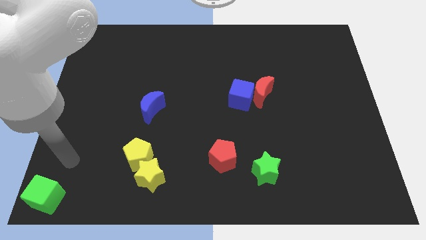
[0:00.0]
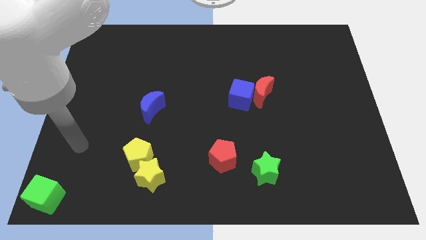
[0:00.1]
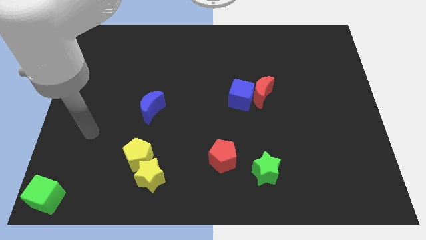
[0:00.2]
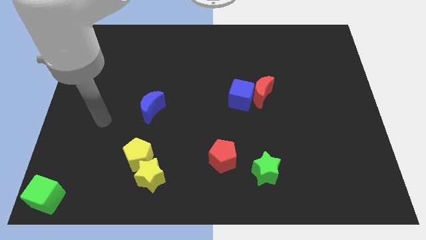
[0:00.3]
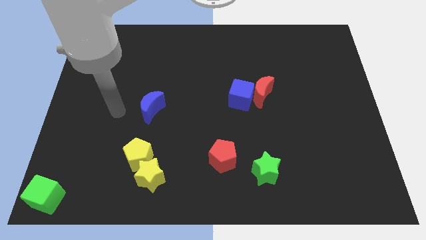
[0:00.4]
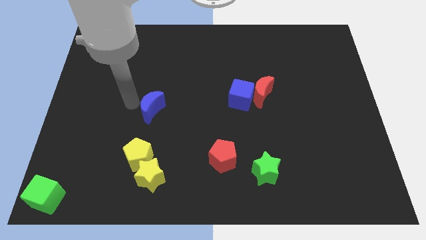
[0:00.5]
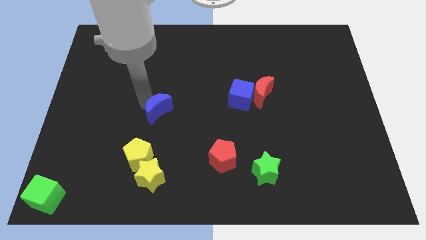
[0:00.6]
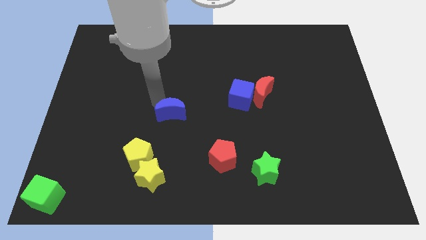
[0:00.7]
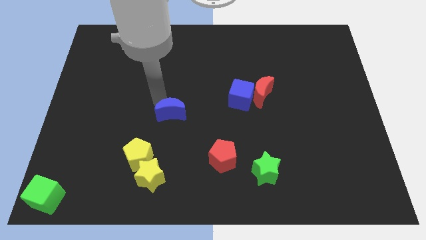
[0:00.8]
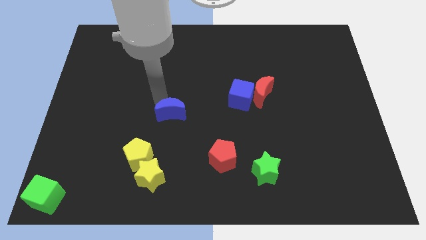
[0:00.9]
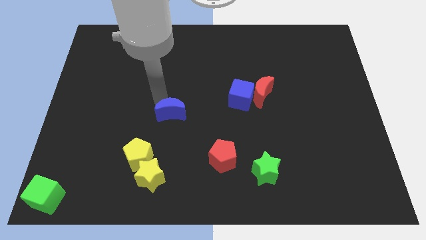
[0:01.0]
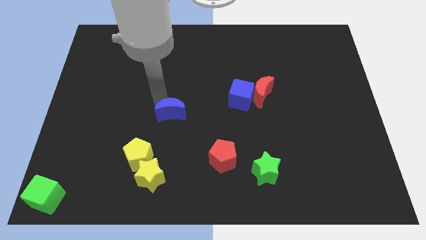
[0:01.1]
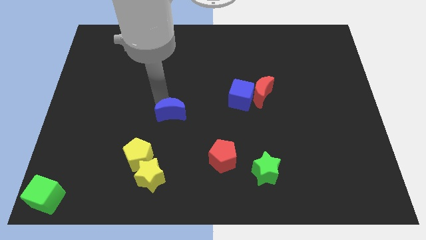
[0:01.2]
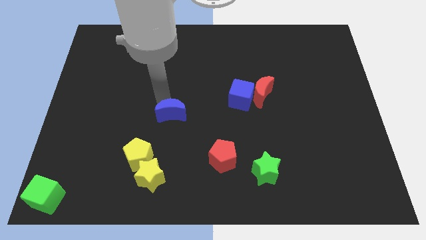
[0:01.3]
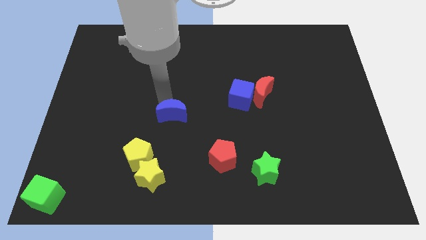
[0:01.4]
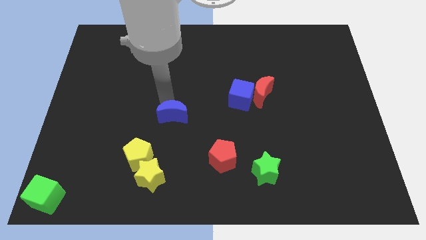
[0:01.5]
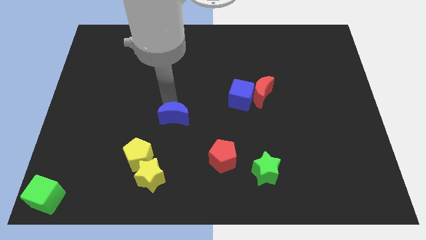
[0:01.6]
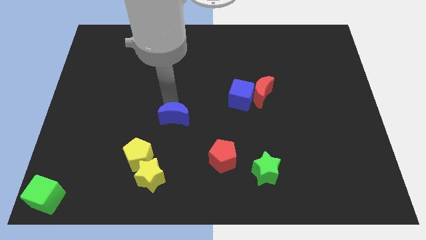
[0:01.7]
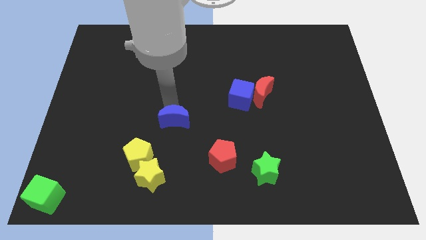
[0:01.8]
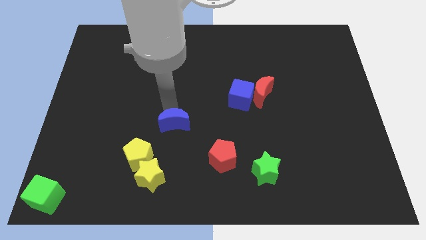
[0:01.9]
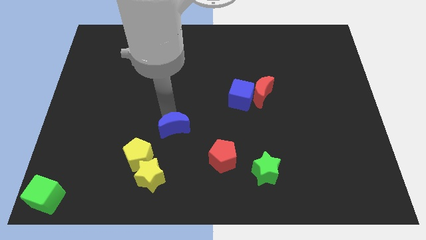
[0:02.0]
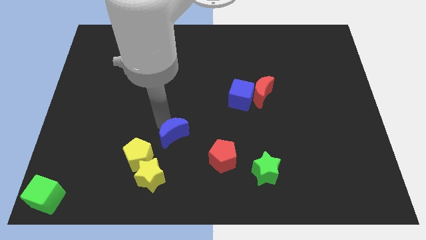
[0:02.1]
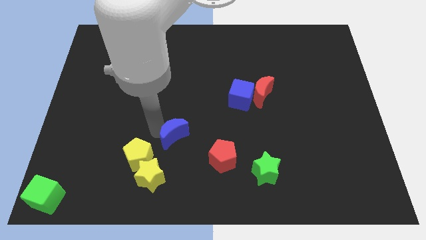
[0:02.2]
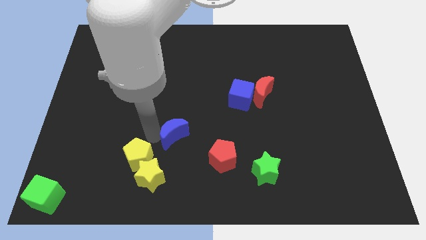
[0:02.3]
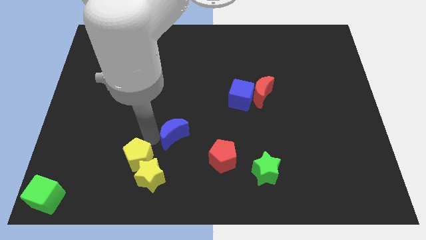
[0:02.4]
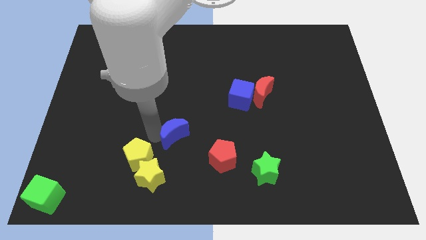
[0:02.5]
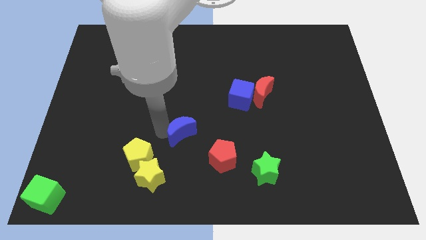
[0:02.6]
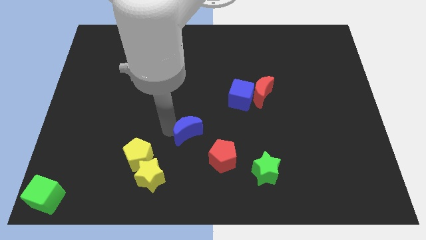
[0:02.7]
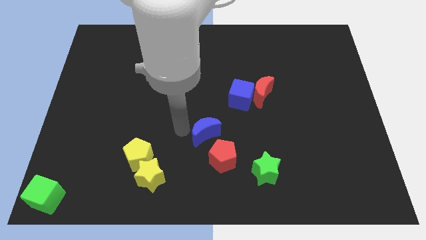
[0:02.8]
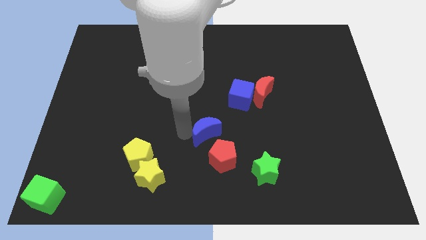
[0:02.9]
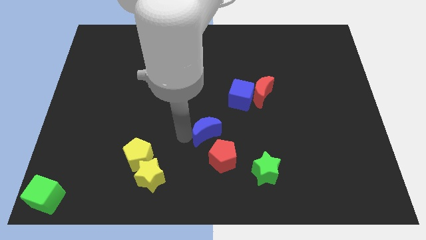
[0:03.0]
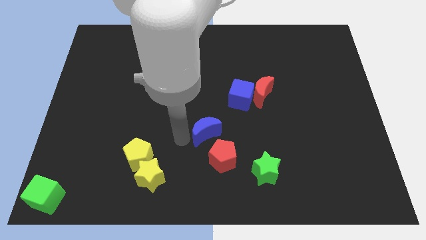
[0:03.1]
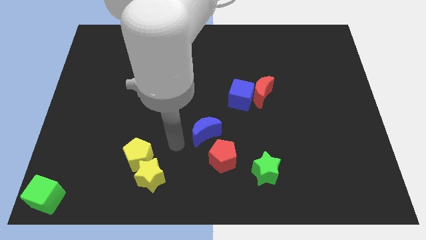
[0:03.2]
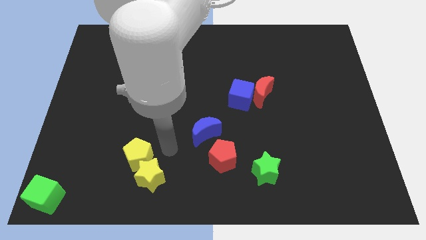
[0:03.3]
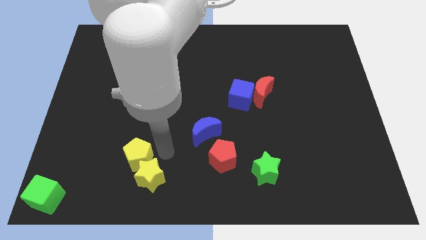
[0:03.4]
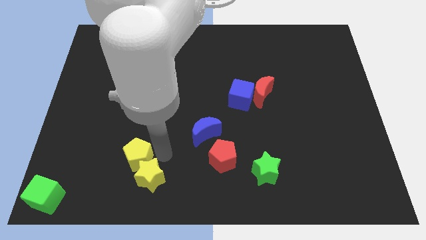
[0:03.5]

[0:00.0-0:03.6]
move the blue moon towards the red pentagon

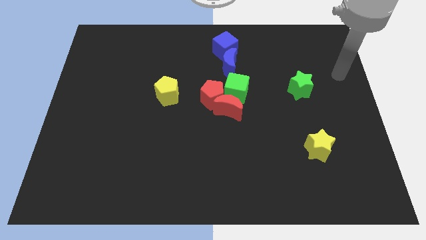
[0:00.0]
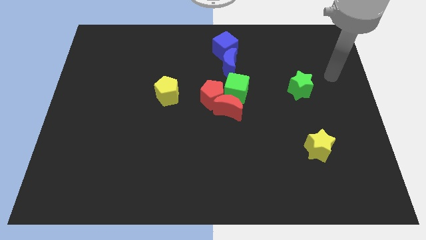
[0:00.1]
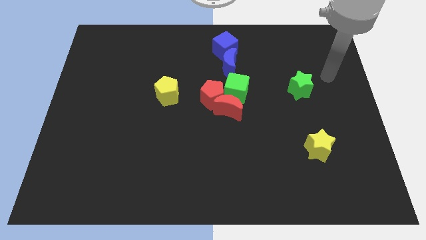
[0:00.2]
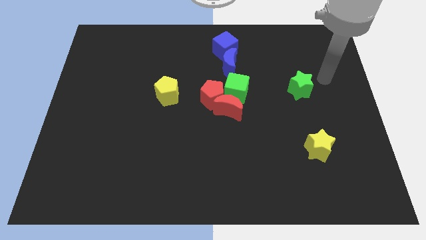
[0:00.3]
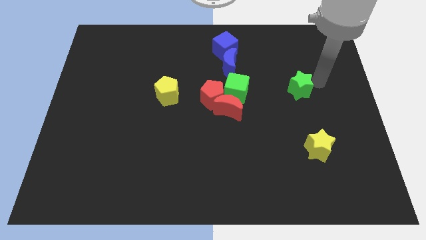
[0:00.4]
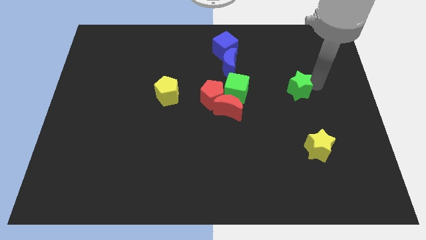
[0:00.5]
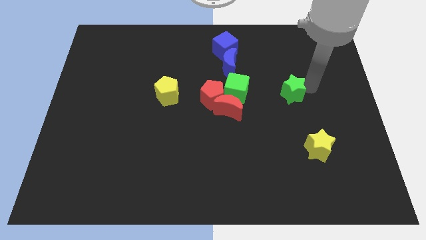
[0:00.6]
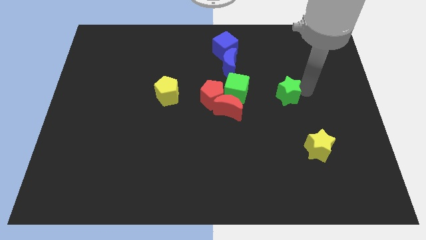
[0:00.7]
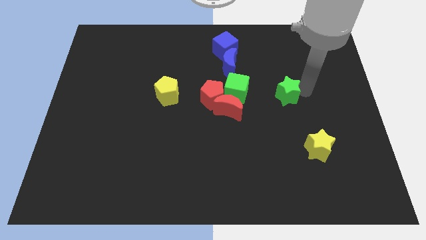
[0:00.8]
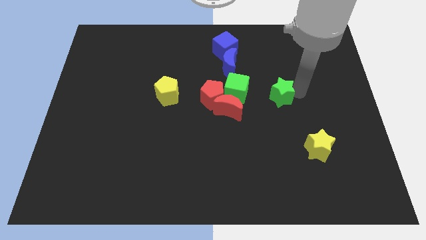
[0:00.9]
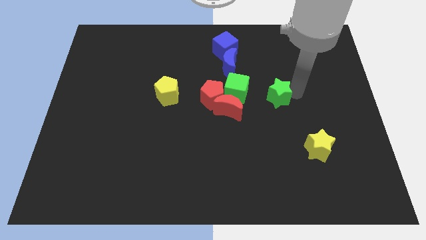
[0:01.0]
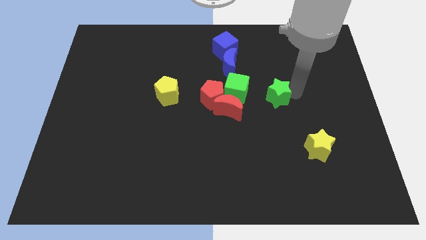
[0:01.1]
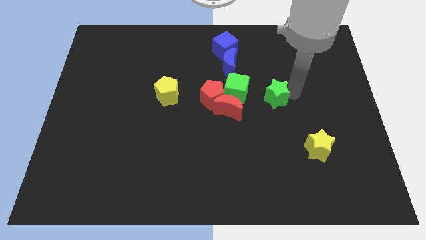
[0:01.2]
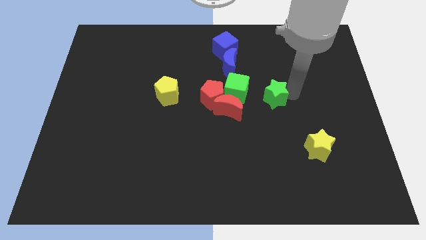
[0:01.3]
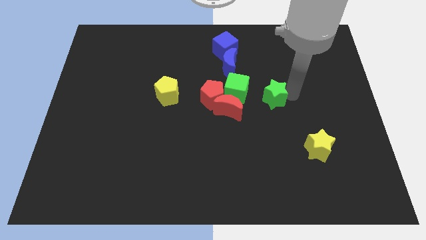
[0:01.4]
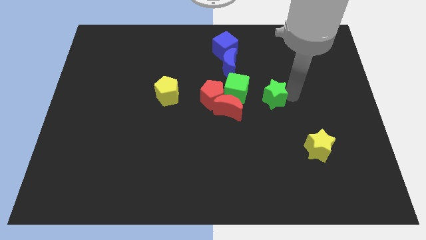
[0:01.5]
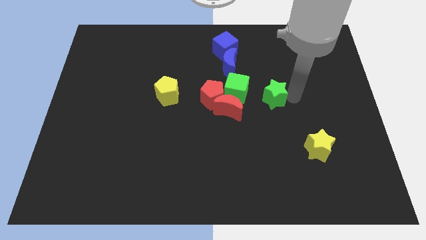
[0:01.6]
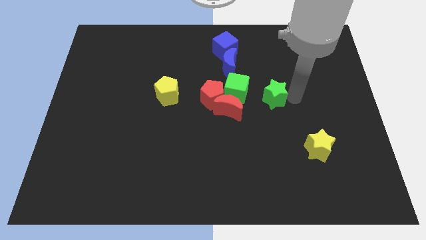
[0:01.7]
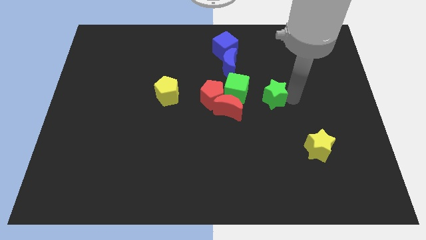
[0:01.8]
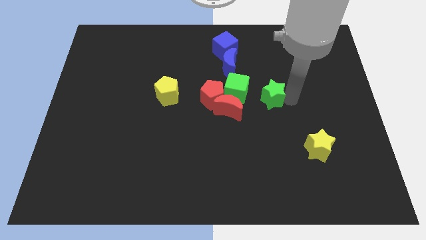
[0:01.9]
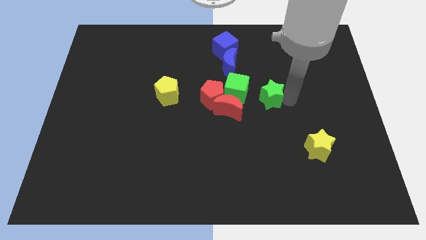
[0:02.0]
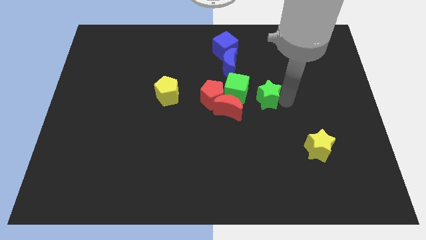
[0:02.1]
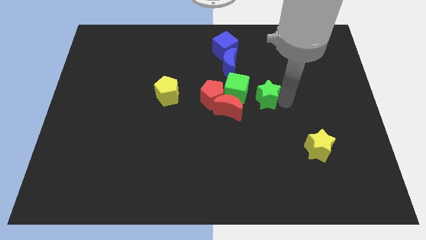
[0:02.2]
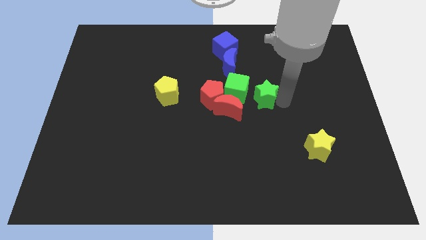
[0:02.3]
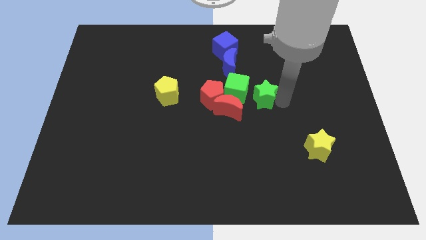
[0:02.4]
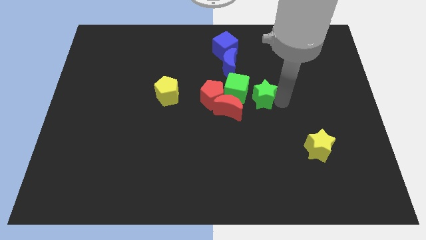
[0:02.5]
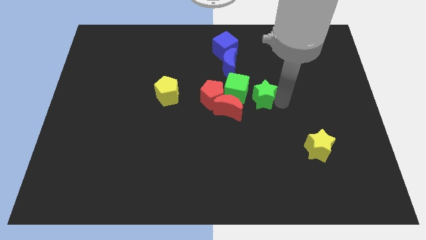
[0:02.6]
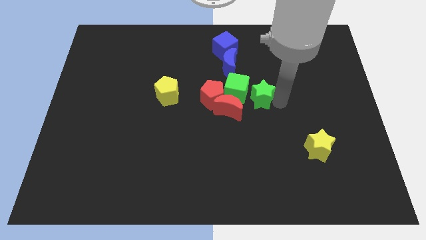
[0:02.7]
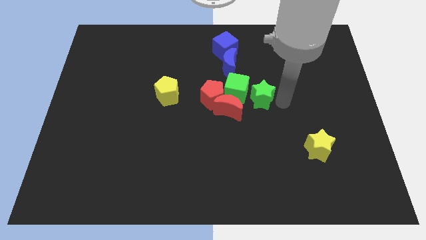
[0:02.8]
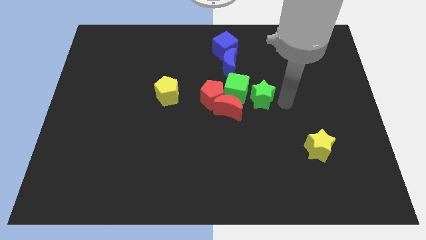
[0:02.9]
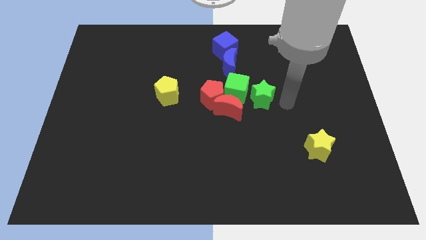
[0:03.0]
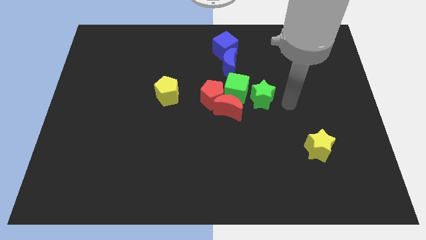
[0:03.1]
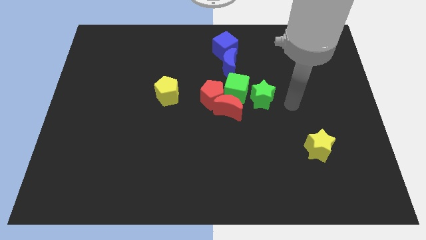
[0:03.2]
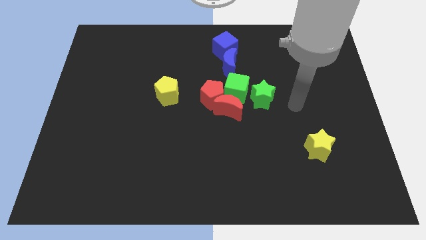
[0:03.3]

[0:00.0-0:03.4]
bring the green star at the right side of the green cube

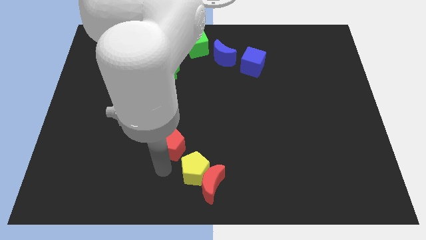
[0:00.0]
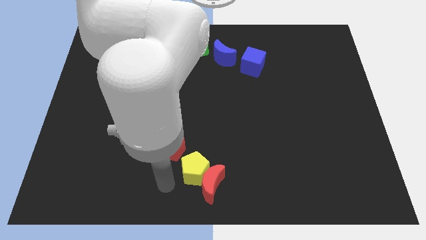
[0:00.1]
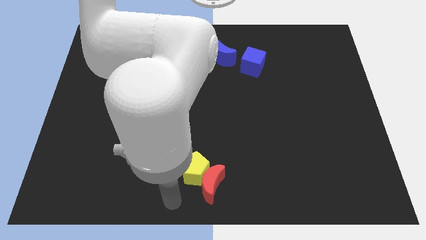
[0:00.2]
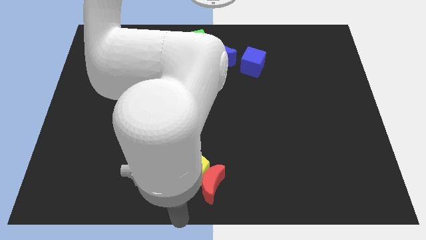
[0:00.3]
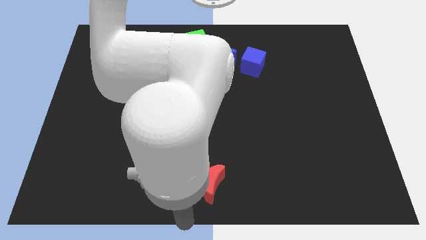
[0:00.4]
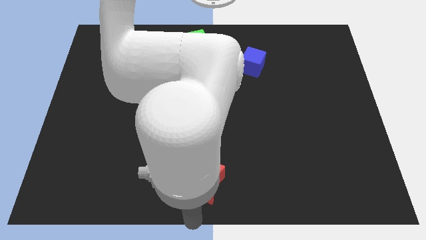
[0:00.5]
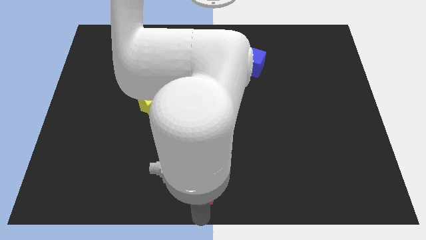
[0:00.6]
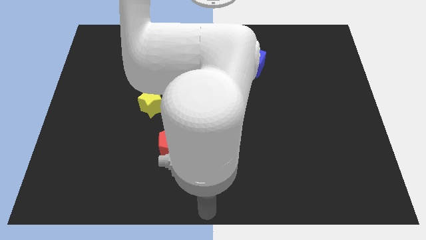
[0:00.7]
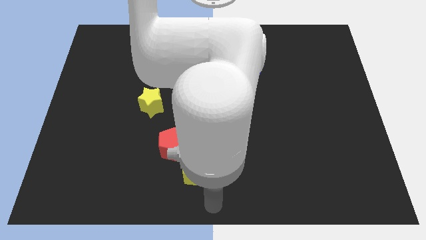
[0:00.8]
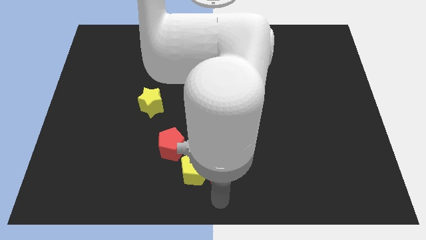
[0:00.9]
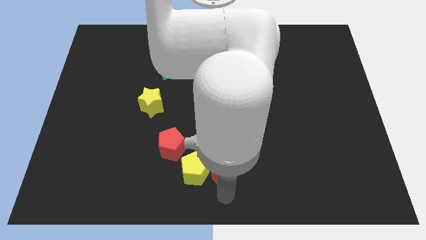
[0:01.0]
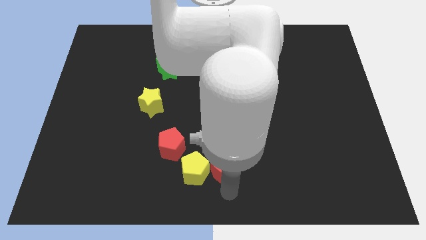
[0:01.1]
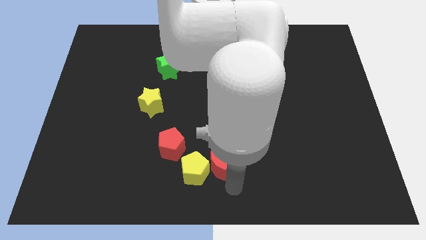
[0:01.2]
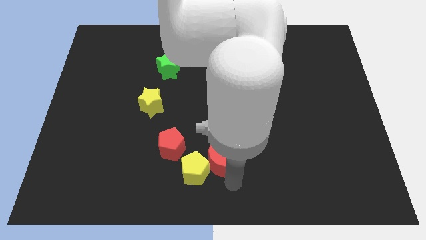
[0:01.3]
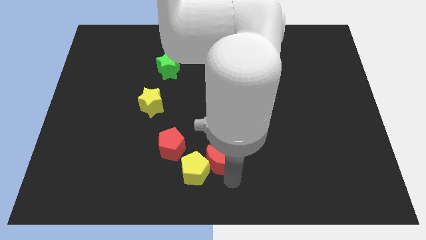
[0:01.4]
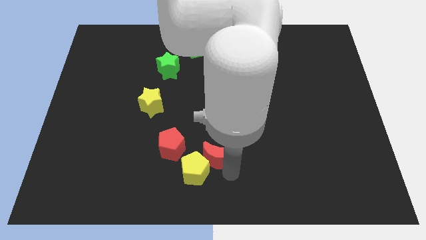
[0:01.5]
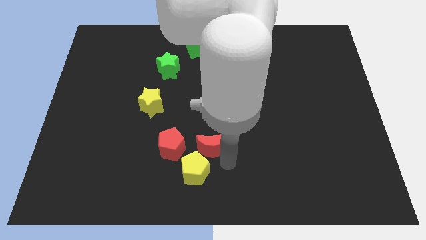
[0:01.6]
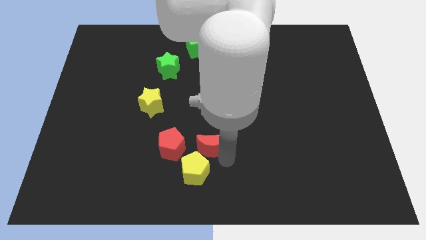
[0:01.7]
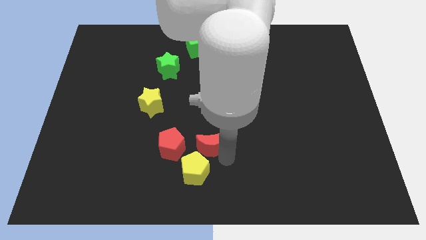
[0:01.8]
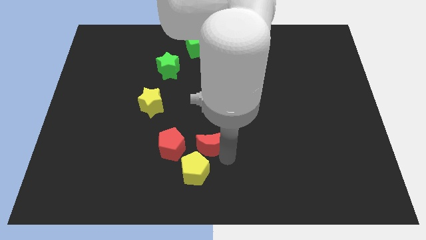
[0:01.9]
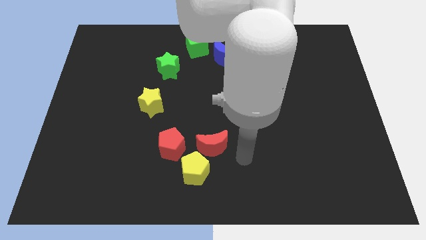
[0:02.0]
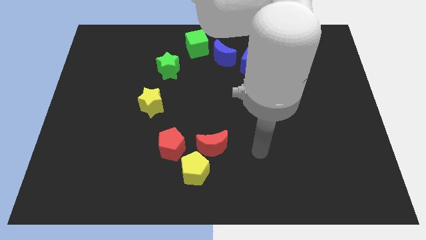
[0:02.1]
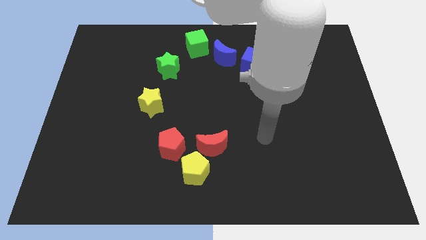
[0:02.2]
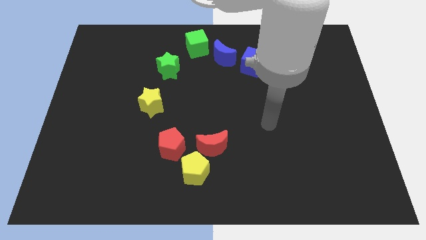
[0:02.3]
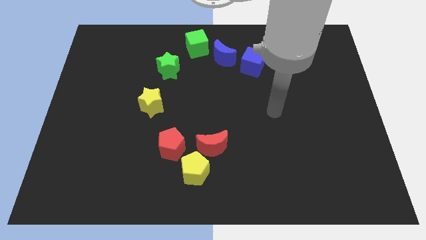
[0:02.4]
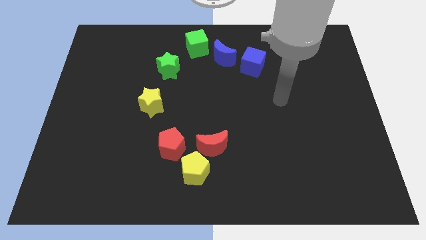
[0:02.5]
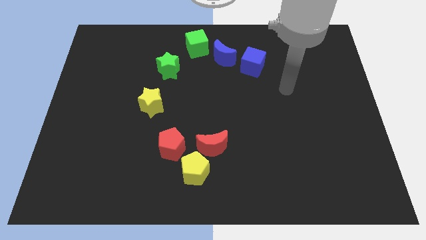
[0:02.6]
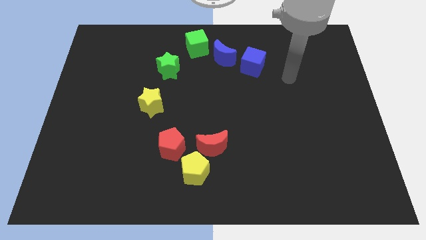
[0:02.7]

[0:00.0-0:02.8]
slide the red crescent to the right of the red pentagon
